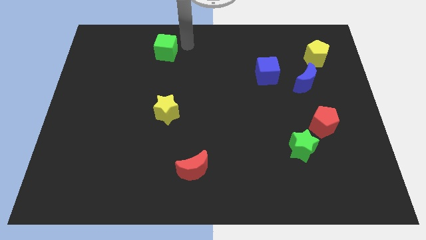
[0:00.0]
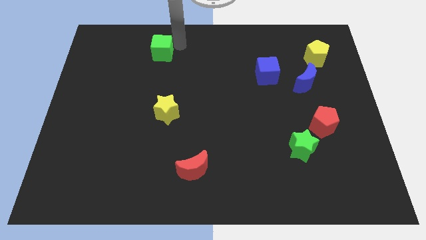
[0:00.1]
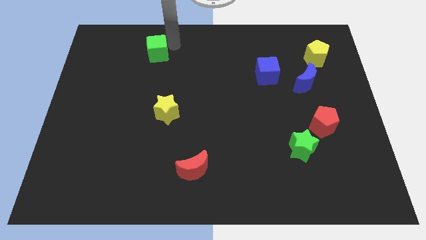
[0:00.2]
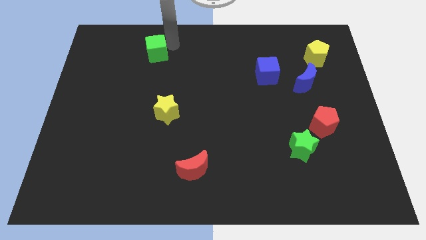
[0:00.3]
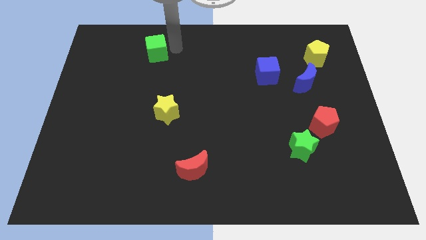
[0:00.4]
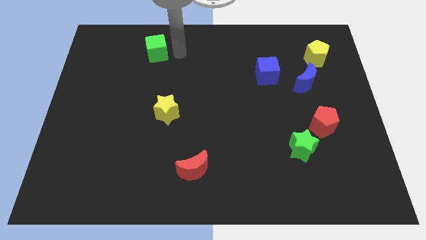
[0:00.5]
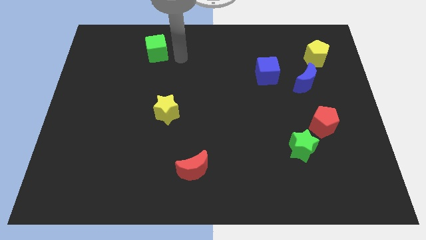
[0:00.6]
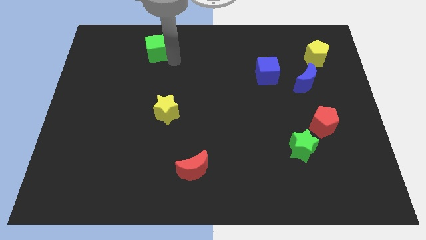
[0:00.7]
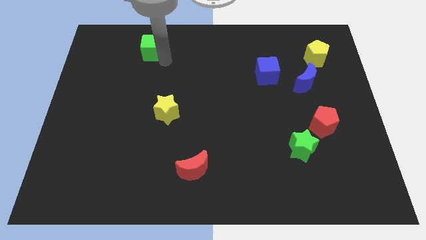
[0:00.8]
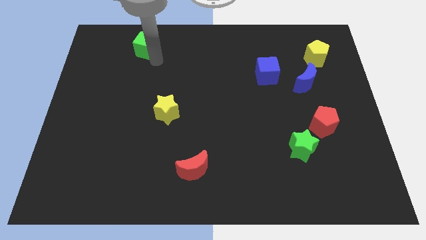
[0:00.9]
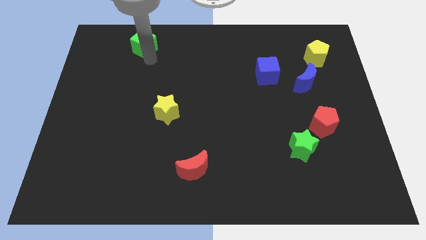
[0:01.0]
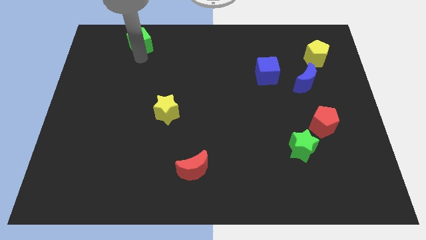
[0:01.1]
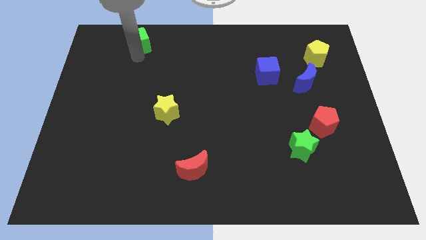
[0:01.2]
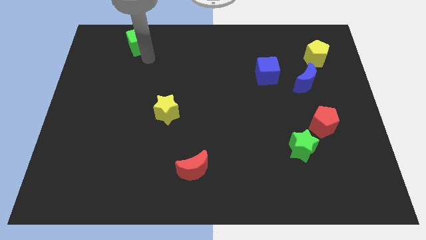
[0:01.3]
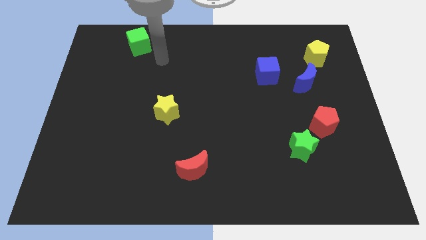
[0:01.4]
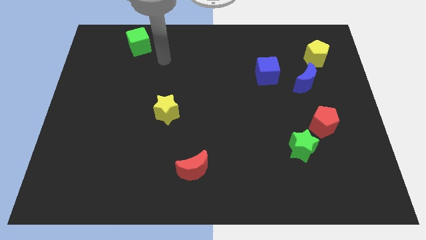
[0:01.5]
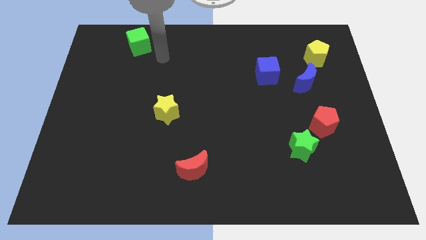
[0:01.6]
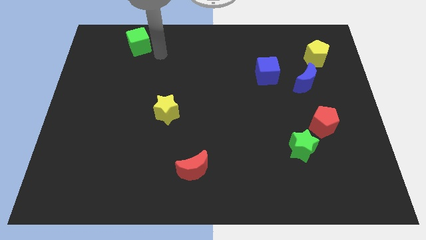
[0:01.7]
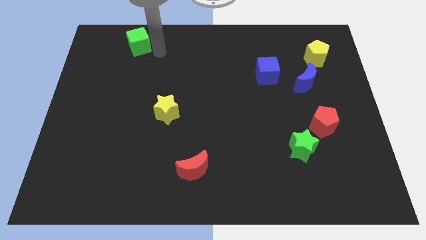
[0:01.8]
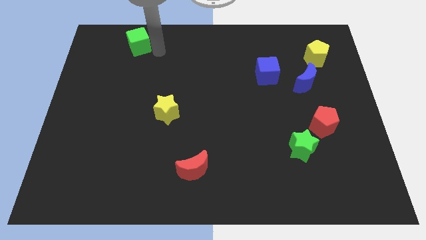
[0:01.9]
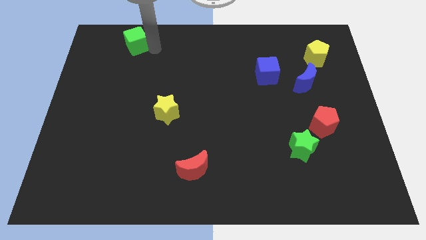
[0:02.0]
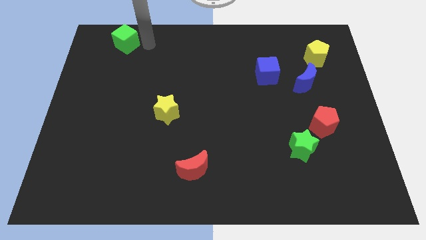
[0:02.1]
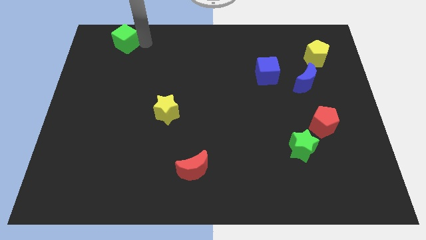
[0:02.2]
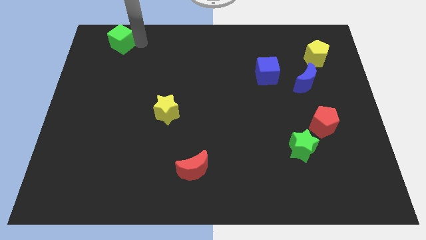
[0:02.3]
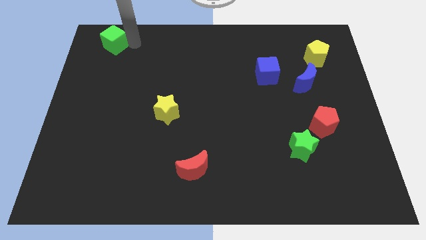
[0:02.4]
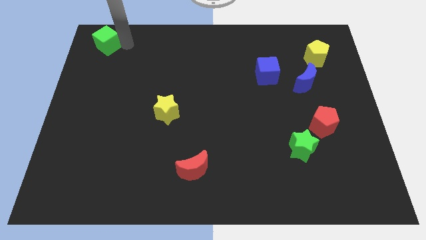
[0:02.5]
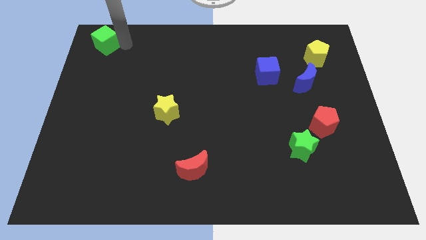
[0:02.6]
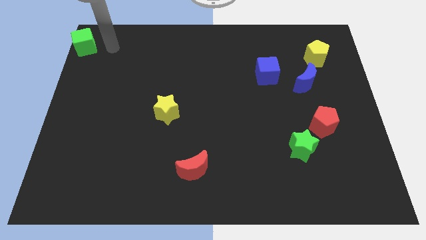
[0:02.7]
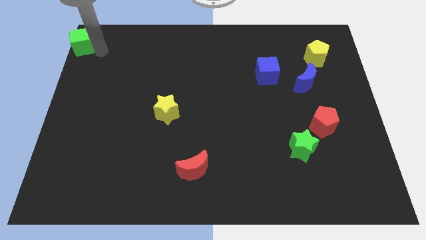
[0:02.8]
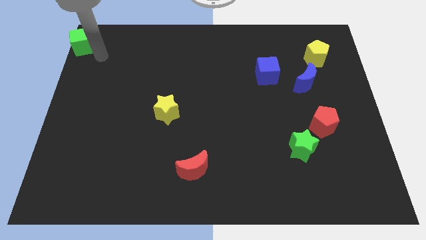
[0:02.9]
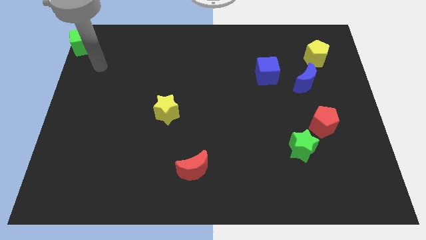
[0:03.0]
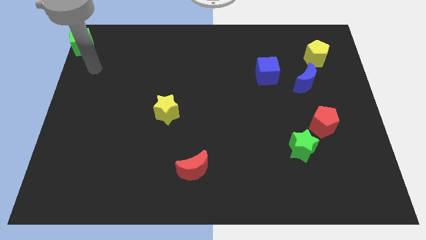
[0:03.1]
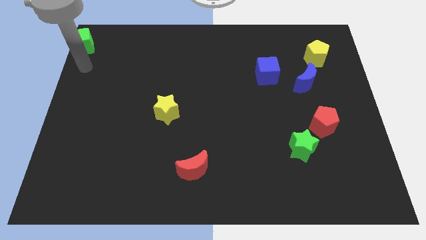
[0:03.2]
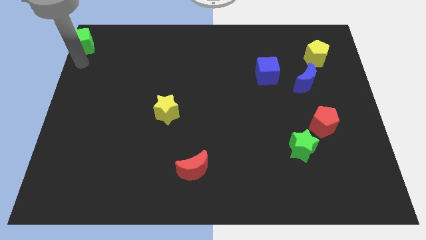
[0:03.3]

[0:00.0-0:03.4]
move the green cube to the top left corner of the board

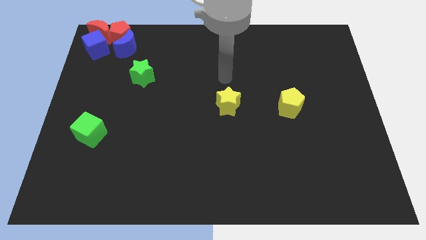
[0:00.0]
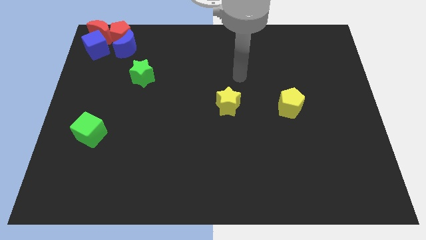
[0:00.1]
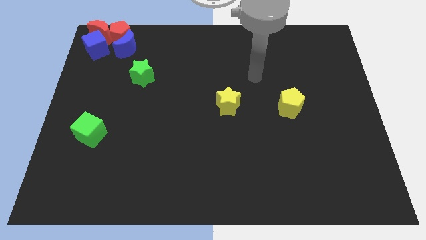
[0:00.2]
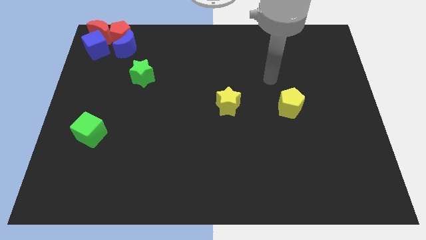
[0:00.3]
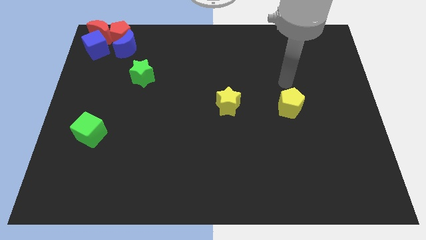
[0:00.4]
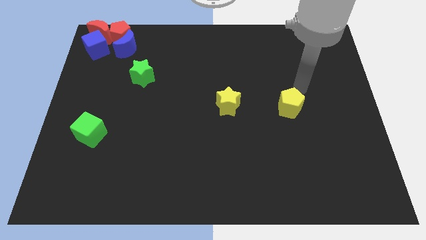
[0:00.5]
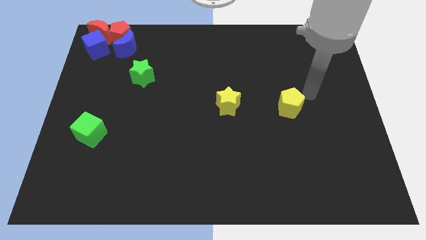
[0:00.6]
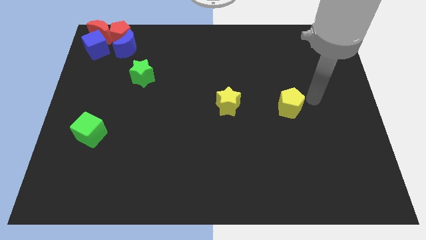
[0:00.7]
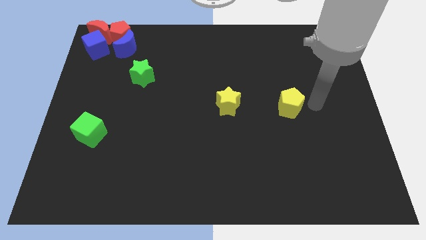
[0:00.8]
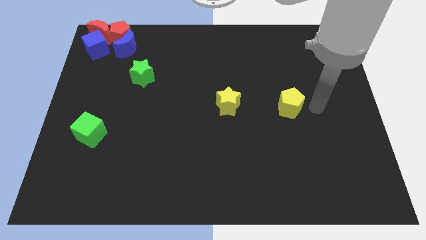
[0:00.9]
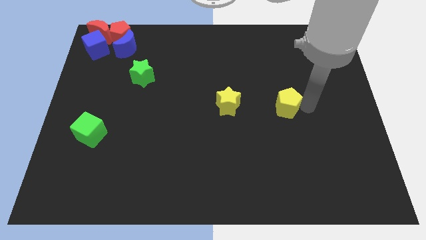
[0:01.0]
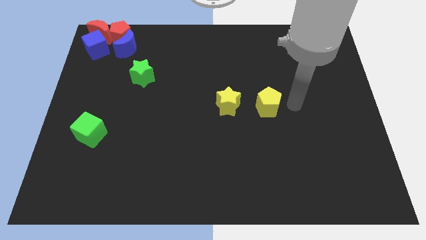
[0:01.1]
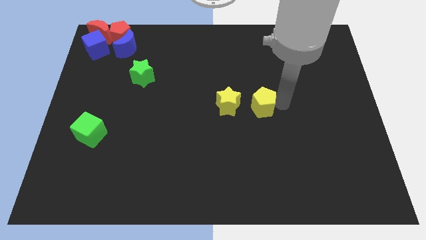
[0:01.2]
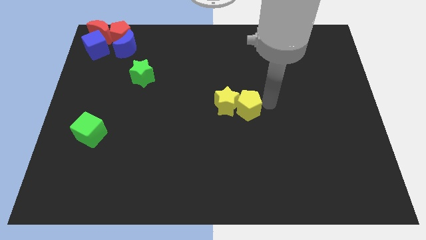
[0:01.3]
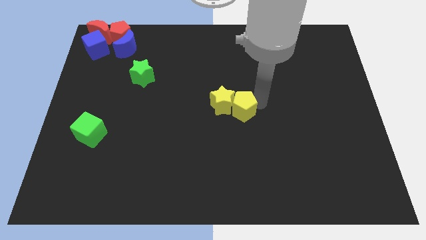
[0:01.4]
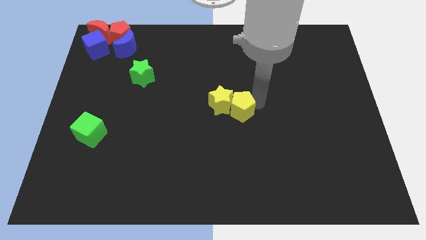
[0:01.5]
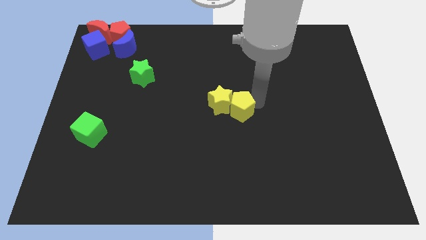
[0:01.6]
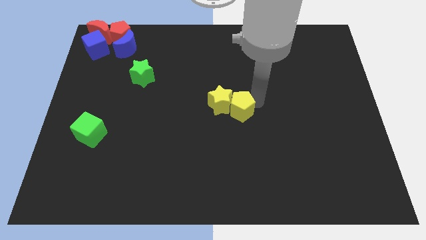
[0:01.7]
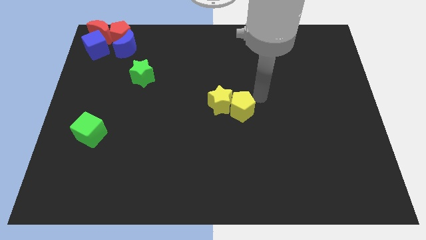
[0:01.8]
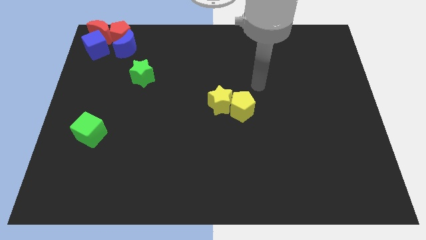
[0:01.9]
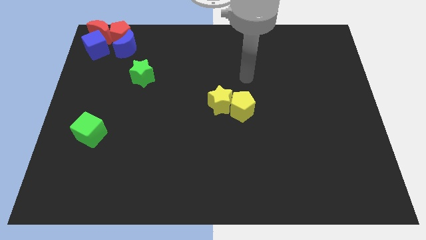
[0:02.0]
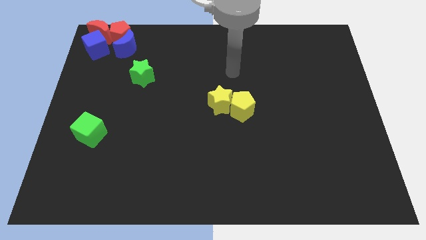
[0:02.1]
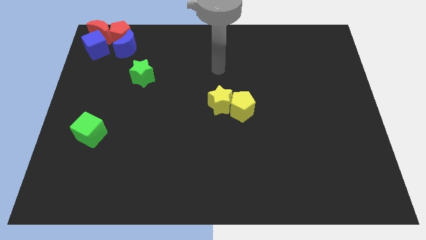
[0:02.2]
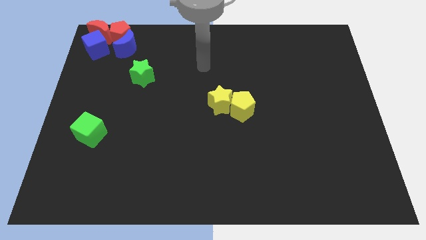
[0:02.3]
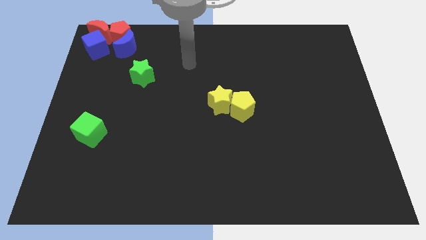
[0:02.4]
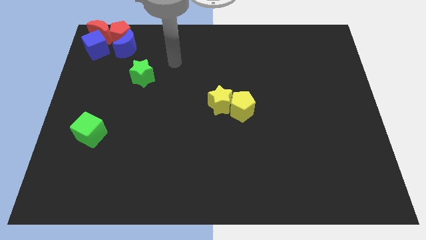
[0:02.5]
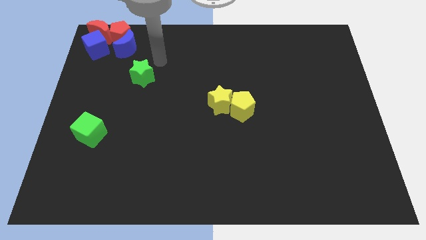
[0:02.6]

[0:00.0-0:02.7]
push the yellow pentagon into the yellow star

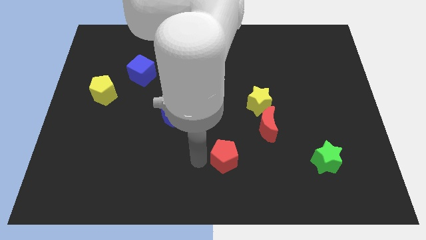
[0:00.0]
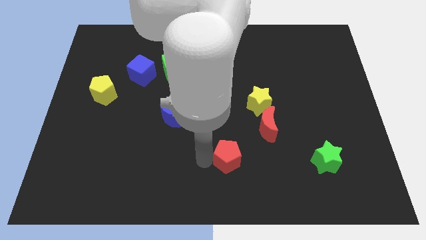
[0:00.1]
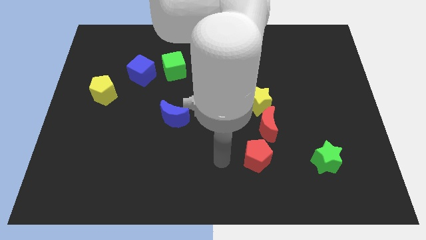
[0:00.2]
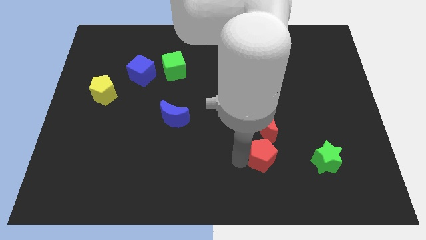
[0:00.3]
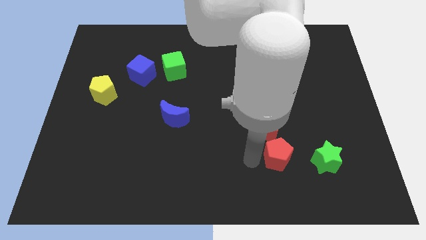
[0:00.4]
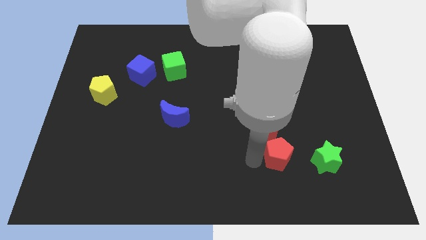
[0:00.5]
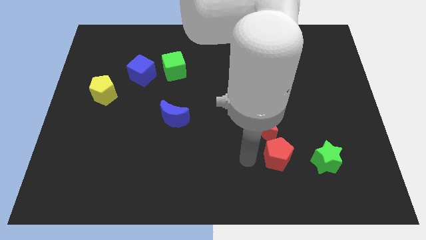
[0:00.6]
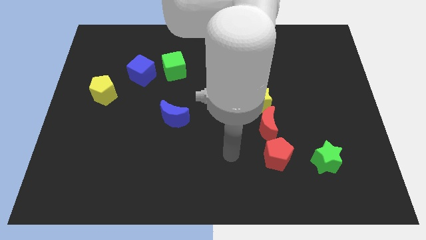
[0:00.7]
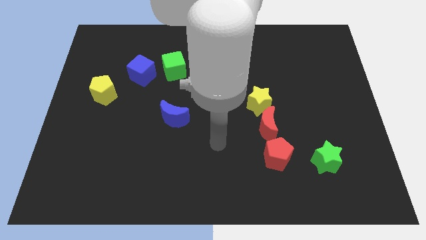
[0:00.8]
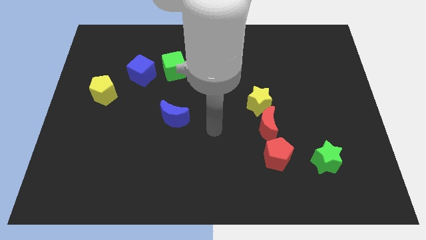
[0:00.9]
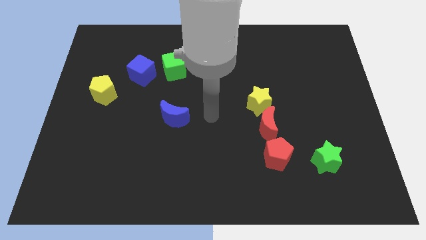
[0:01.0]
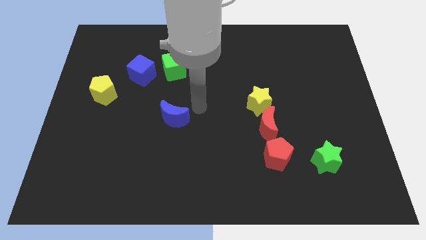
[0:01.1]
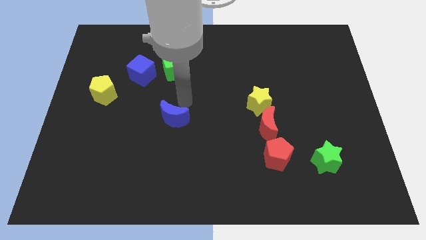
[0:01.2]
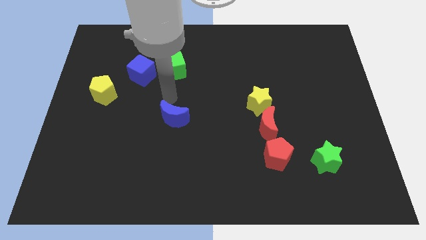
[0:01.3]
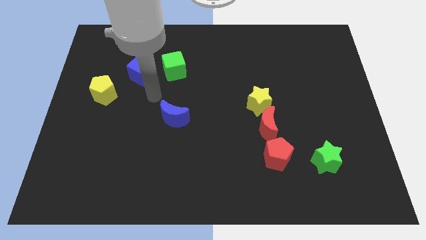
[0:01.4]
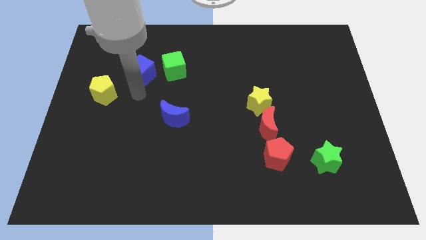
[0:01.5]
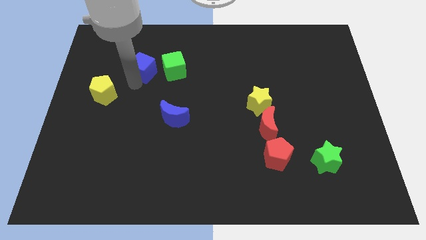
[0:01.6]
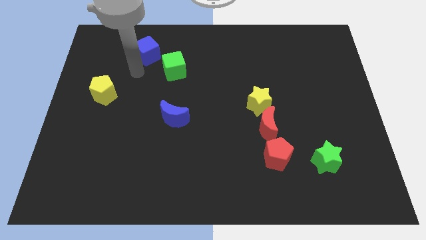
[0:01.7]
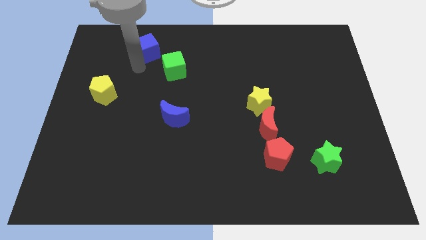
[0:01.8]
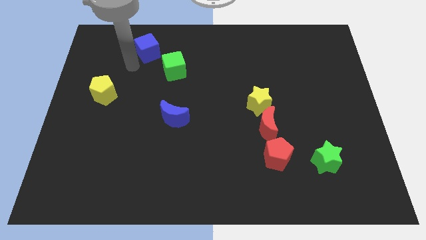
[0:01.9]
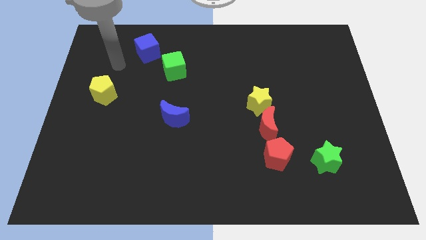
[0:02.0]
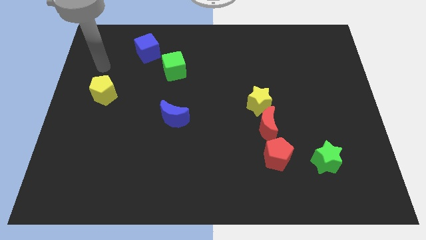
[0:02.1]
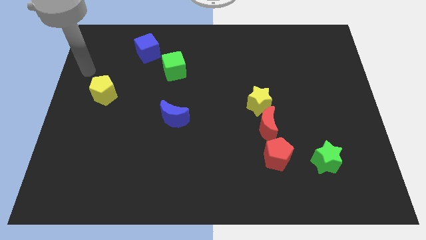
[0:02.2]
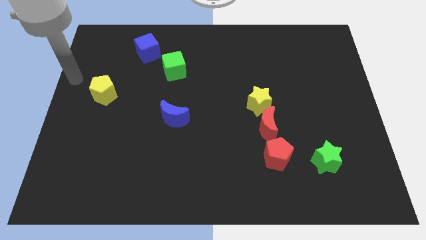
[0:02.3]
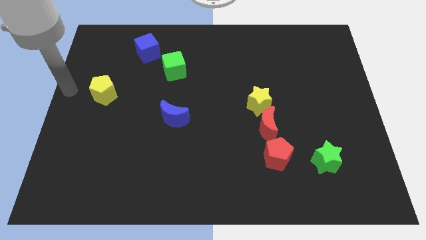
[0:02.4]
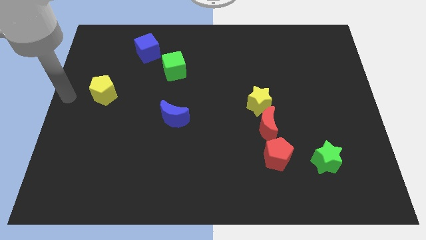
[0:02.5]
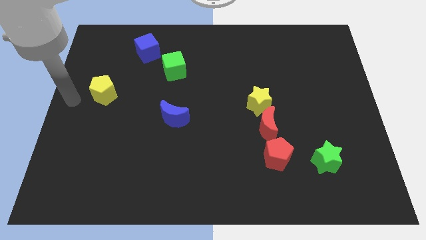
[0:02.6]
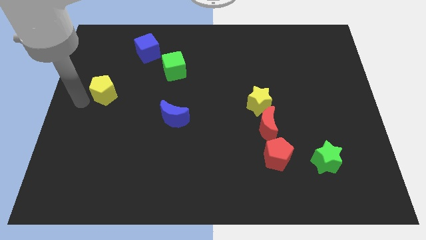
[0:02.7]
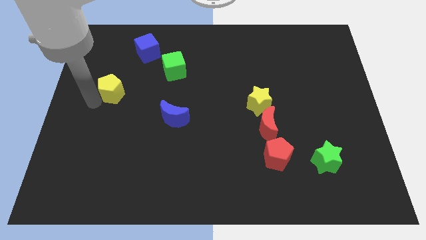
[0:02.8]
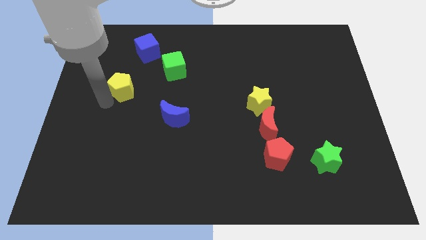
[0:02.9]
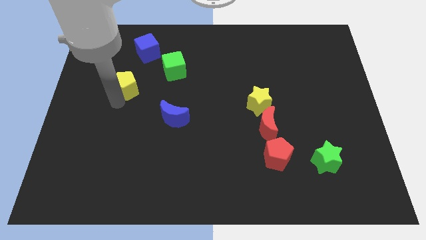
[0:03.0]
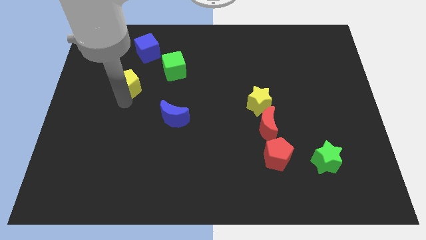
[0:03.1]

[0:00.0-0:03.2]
move the blue cube diagonally top left to the green cube
